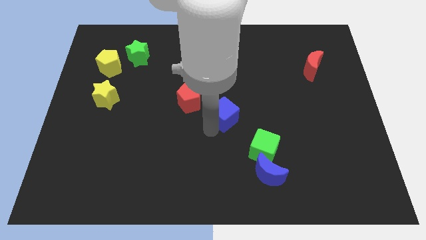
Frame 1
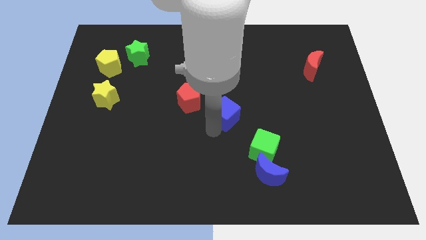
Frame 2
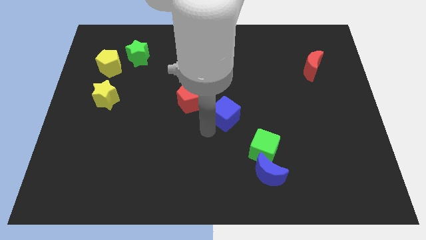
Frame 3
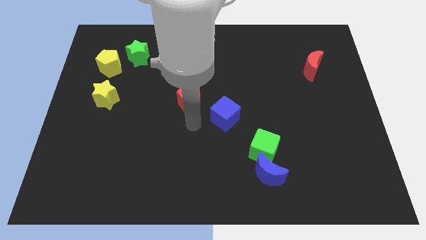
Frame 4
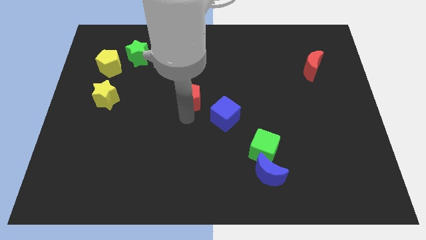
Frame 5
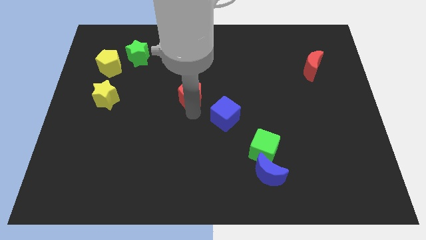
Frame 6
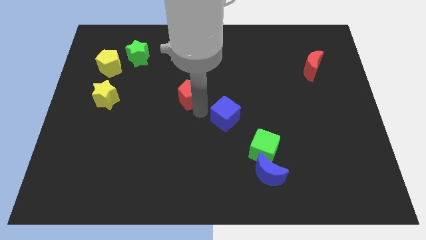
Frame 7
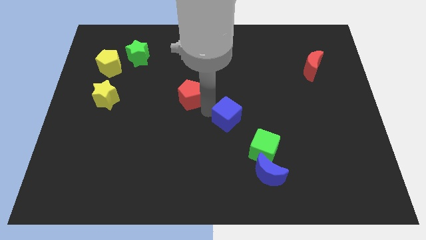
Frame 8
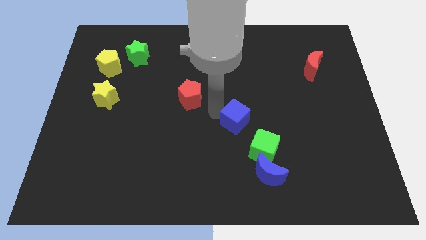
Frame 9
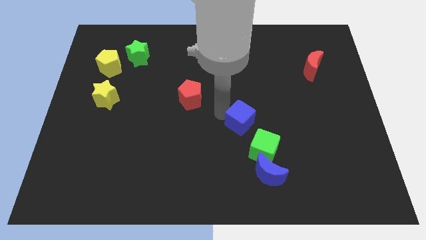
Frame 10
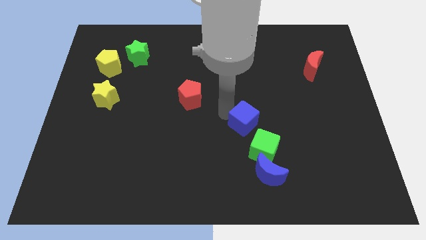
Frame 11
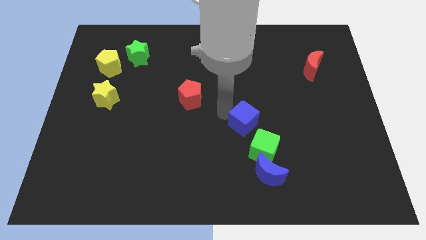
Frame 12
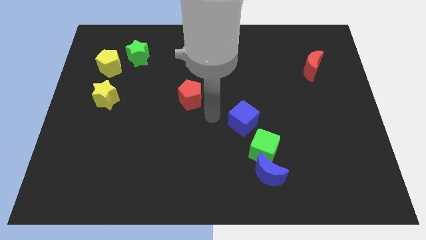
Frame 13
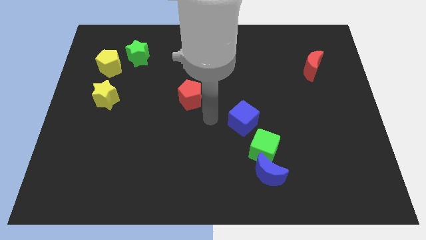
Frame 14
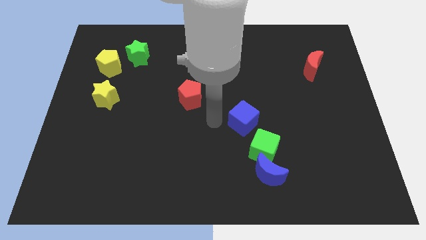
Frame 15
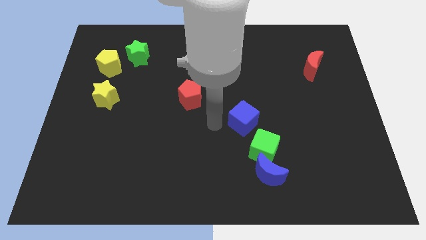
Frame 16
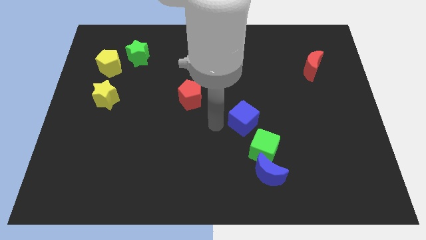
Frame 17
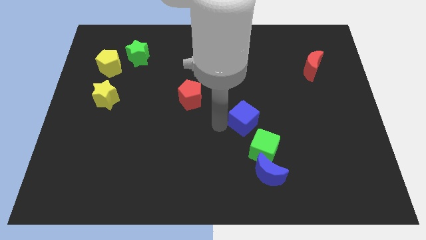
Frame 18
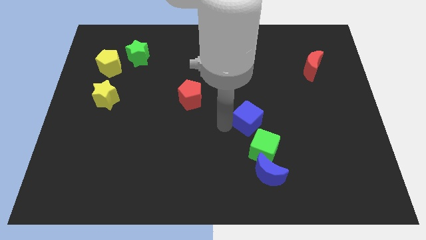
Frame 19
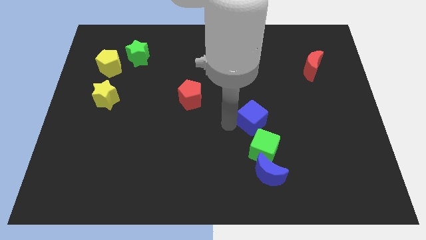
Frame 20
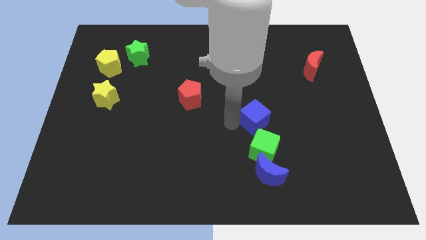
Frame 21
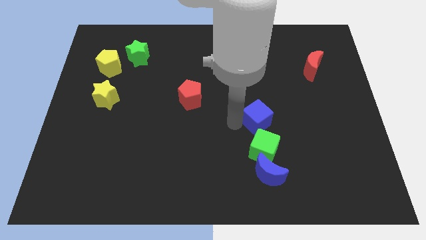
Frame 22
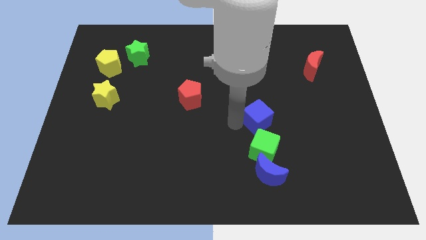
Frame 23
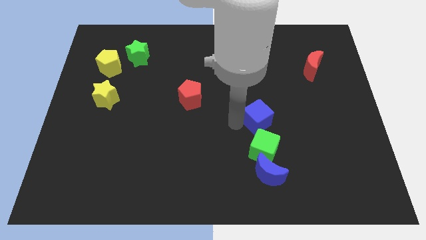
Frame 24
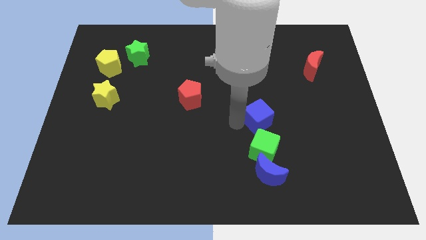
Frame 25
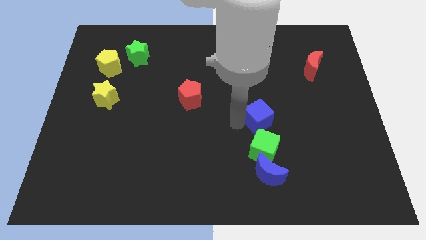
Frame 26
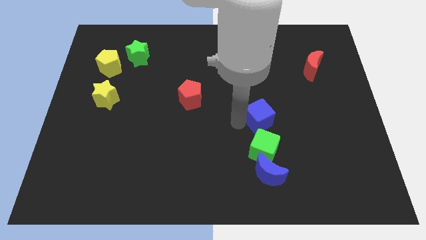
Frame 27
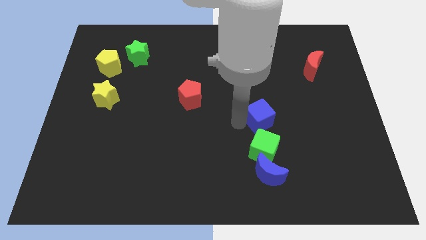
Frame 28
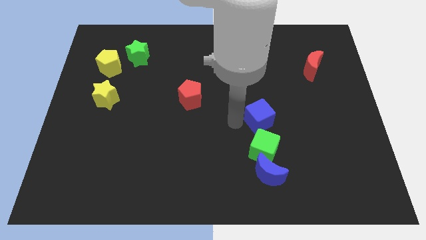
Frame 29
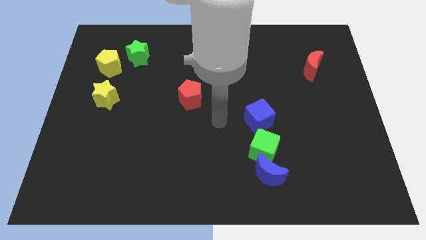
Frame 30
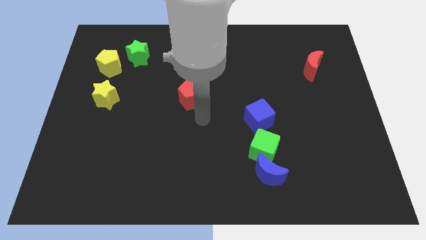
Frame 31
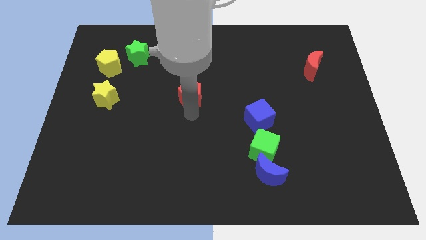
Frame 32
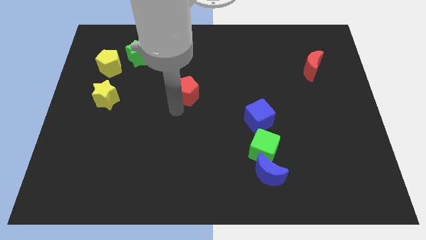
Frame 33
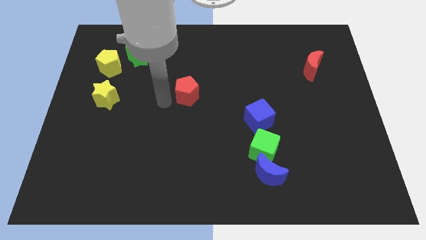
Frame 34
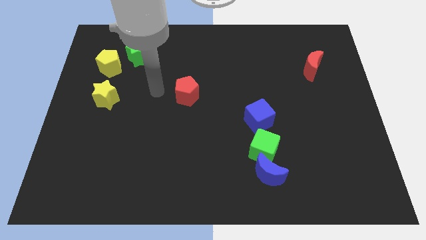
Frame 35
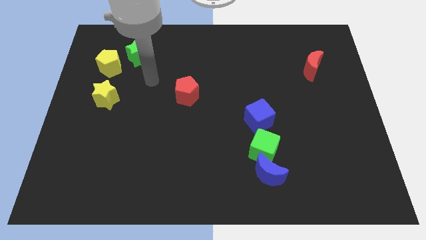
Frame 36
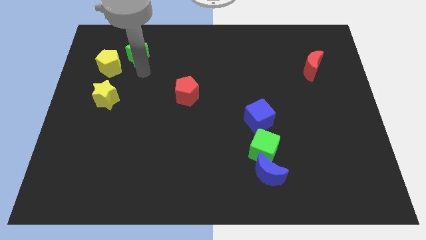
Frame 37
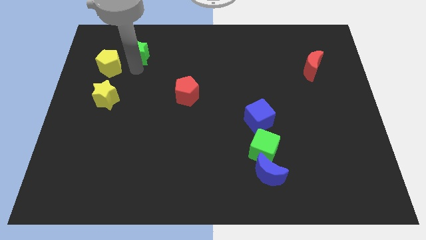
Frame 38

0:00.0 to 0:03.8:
put the blue cube vertically above the green cube

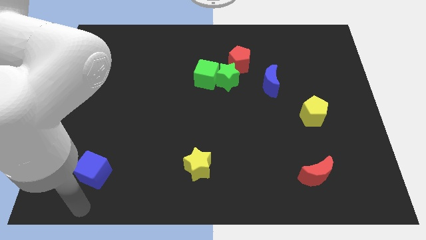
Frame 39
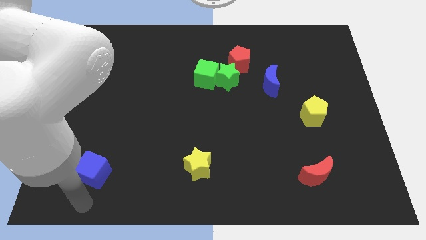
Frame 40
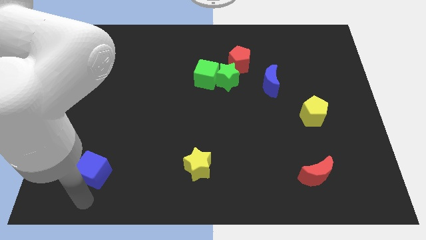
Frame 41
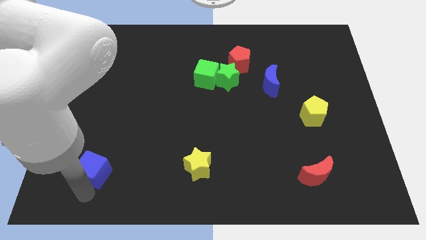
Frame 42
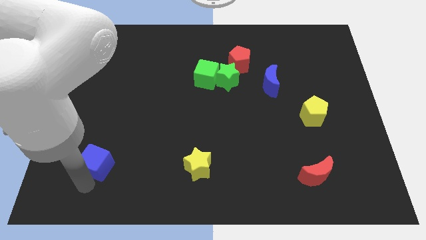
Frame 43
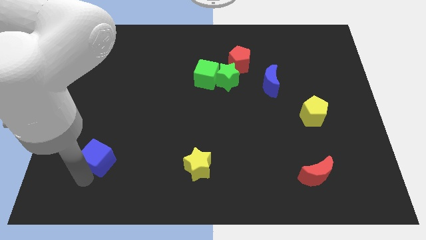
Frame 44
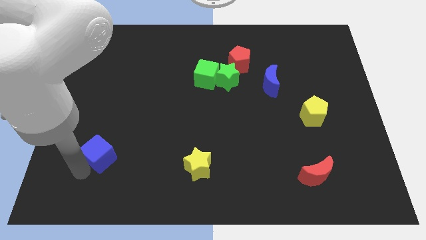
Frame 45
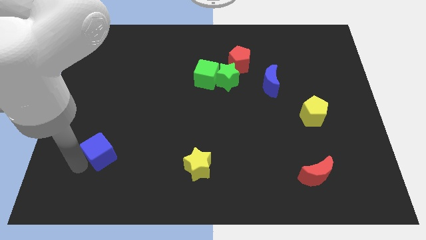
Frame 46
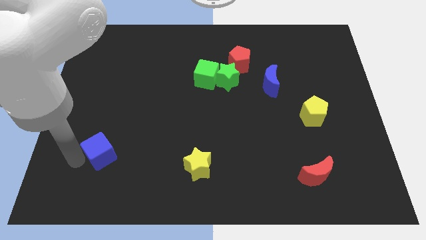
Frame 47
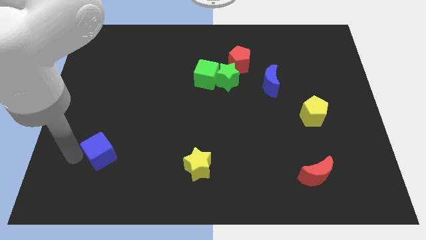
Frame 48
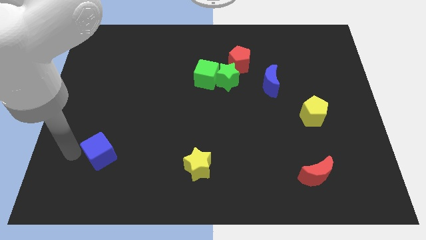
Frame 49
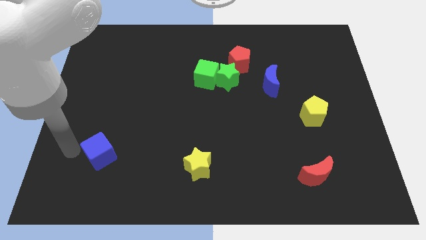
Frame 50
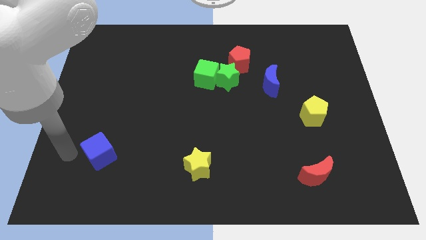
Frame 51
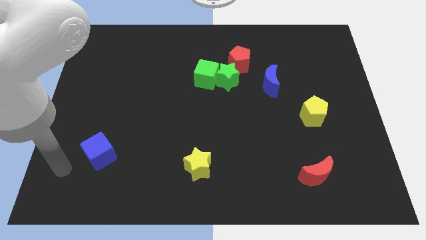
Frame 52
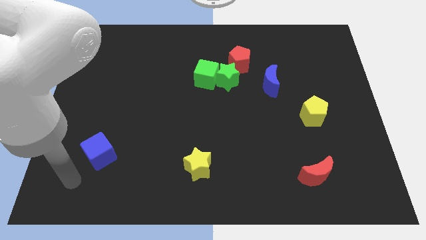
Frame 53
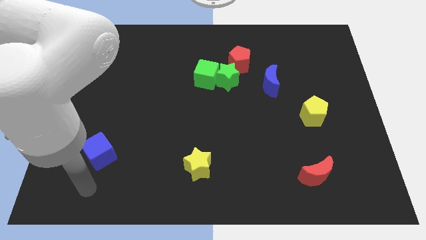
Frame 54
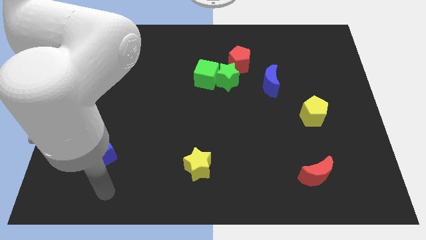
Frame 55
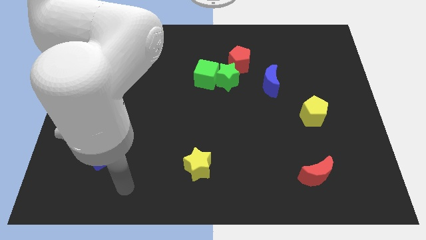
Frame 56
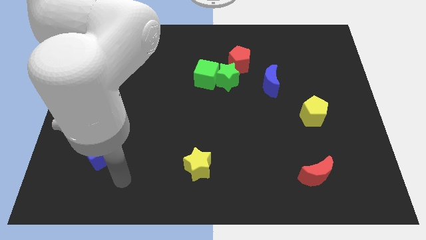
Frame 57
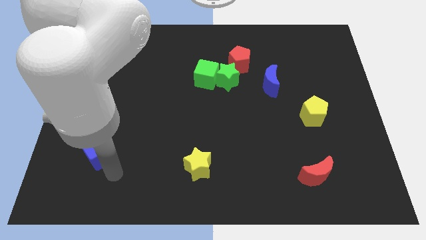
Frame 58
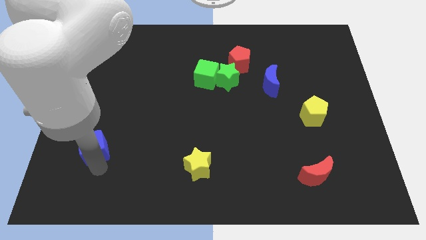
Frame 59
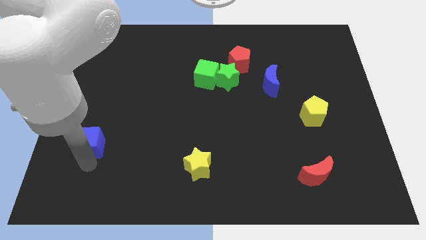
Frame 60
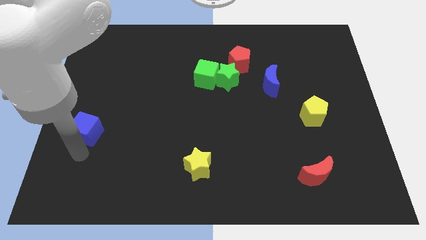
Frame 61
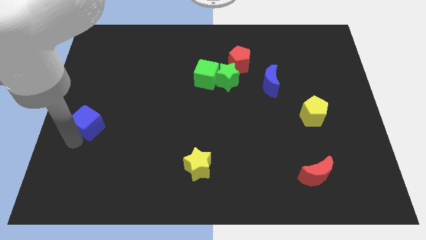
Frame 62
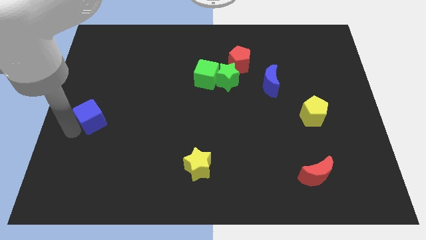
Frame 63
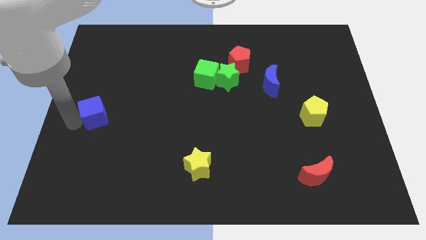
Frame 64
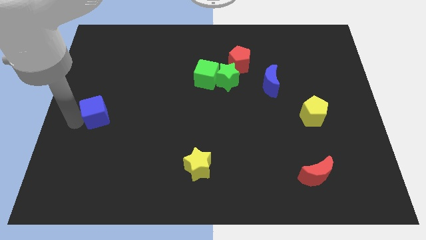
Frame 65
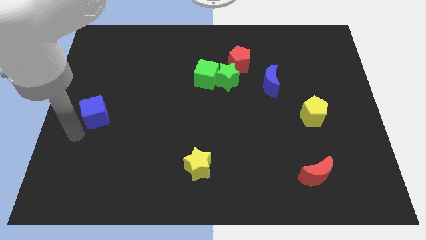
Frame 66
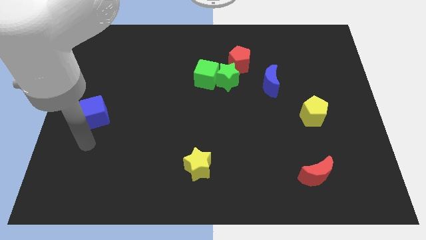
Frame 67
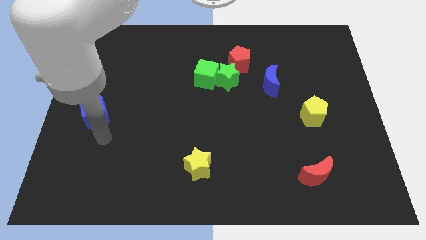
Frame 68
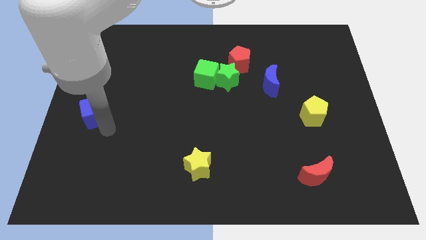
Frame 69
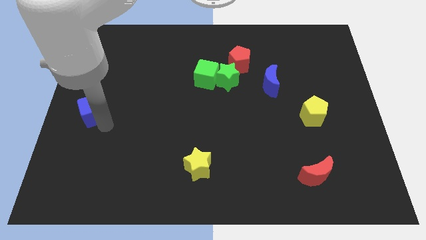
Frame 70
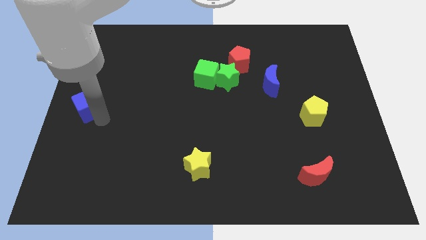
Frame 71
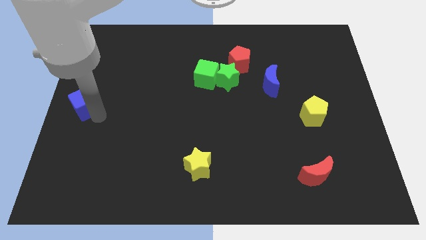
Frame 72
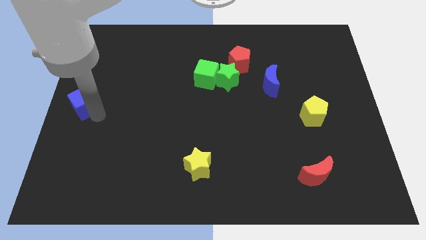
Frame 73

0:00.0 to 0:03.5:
move blue cube on center left

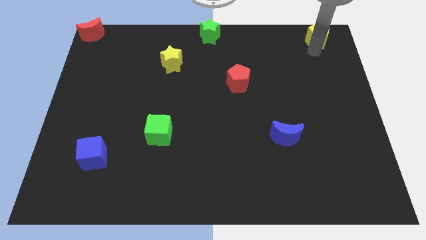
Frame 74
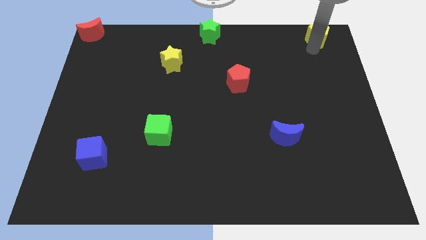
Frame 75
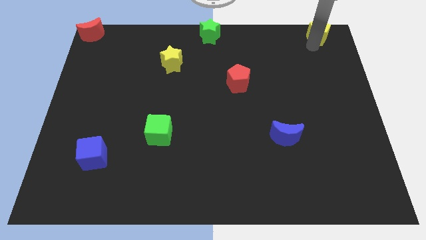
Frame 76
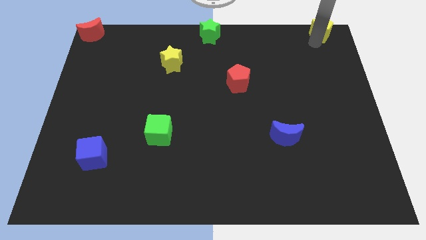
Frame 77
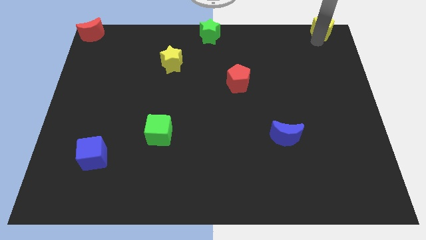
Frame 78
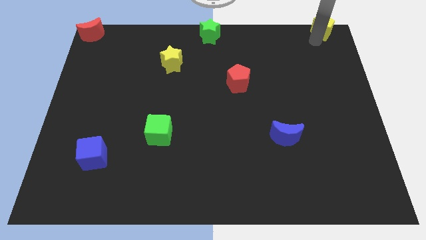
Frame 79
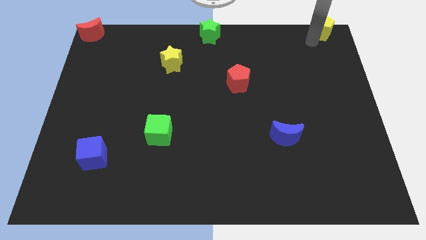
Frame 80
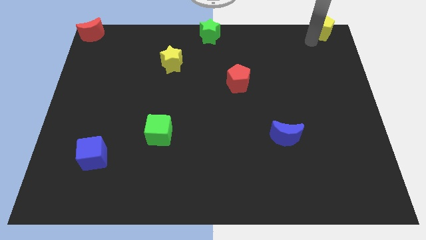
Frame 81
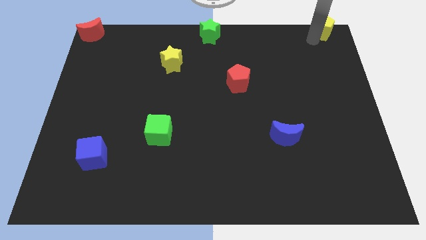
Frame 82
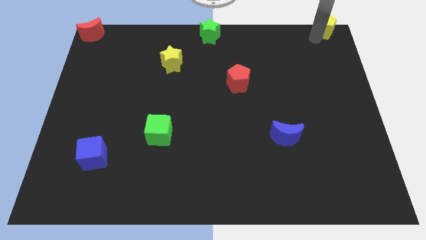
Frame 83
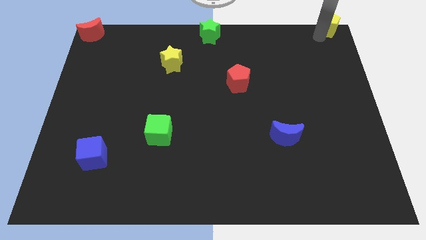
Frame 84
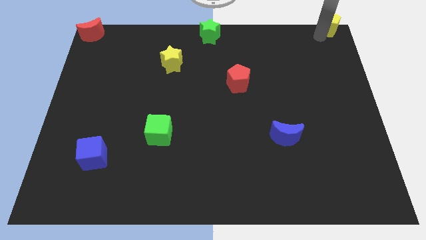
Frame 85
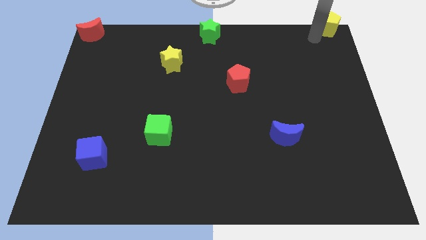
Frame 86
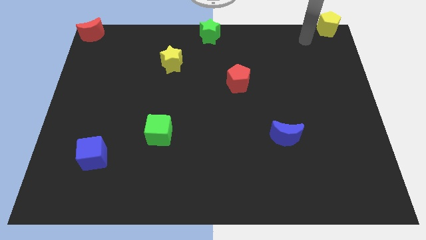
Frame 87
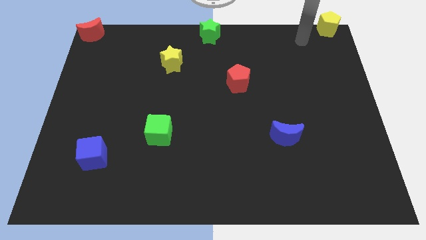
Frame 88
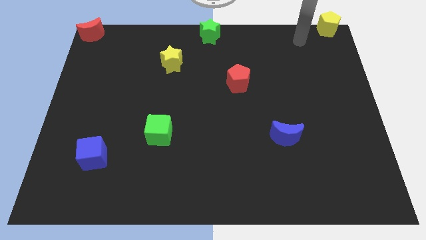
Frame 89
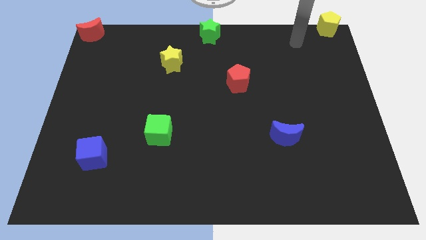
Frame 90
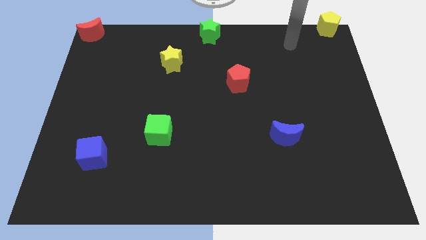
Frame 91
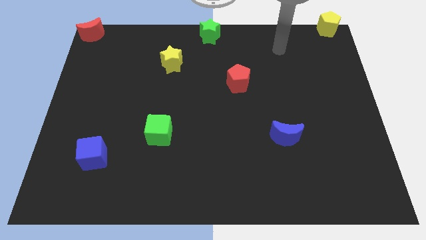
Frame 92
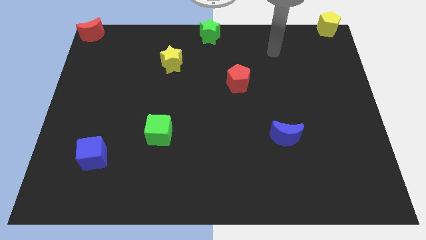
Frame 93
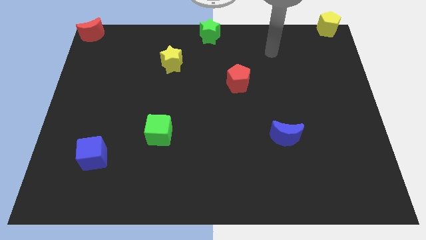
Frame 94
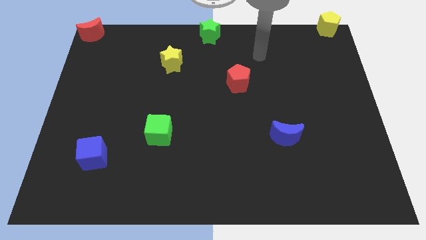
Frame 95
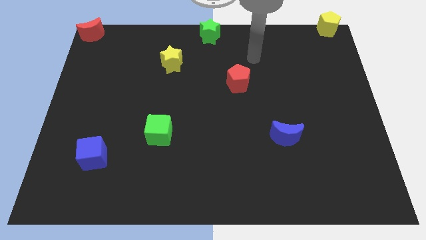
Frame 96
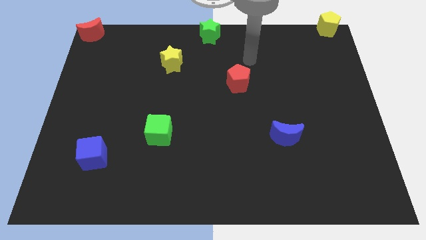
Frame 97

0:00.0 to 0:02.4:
move the yellow pentagon to the top right corner of the board
